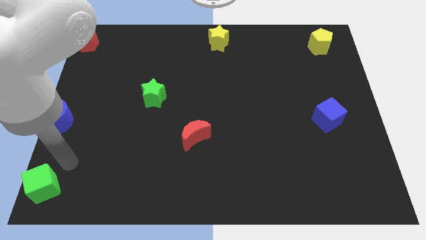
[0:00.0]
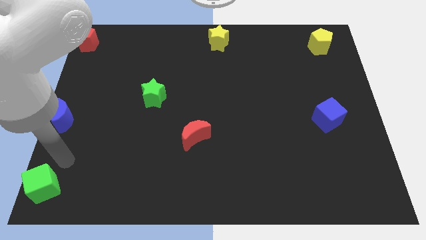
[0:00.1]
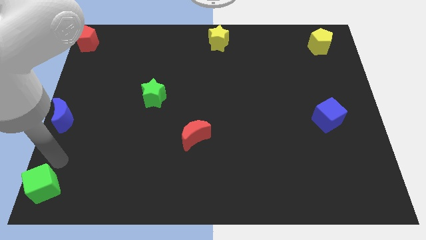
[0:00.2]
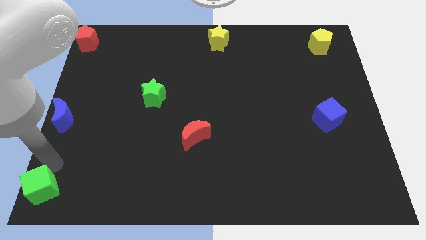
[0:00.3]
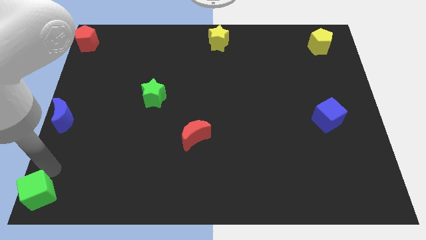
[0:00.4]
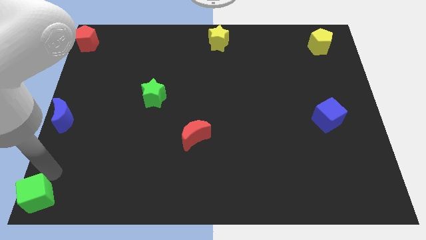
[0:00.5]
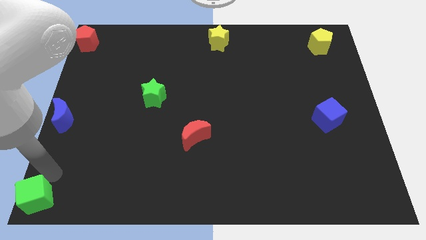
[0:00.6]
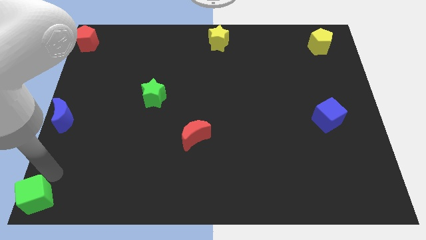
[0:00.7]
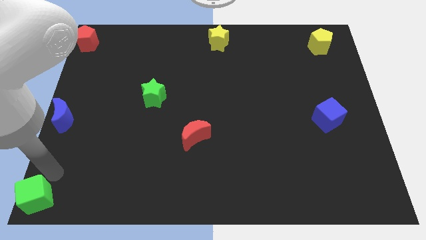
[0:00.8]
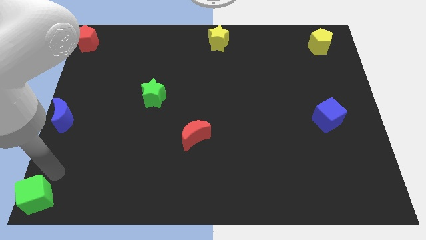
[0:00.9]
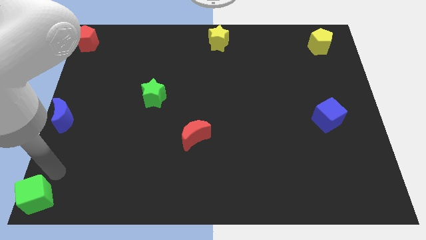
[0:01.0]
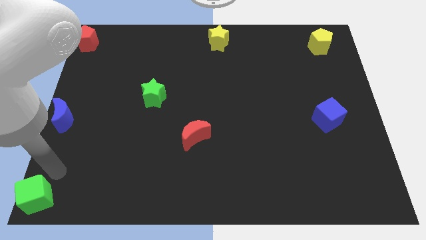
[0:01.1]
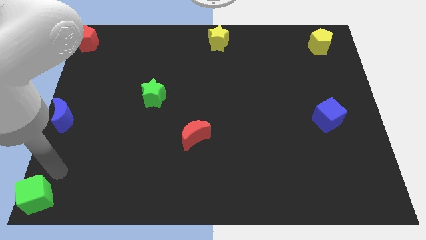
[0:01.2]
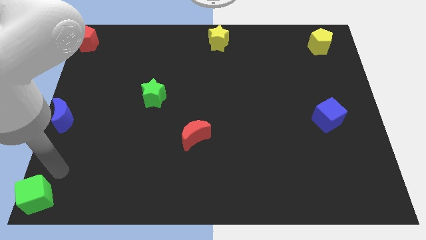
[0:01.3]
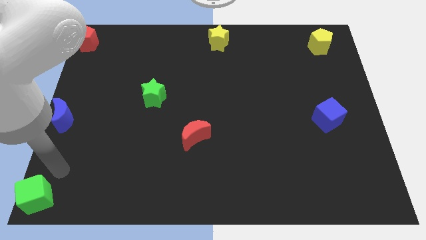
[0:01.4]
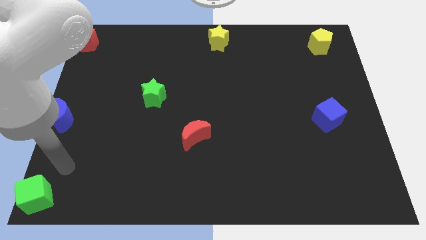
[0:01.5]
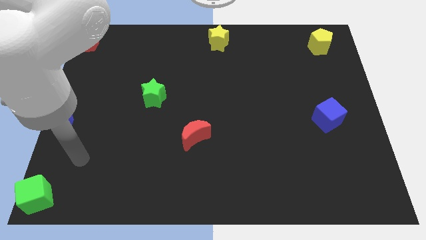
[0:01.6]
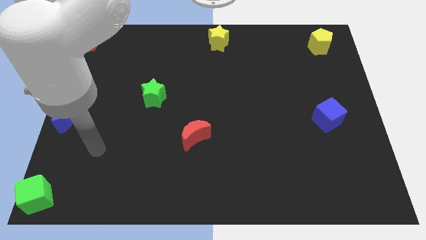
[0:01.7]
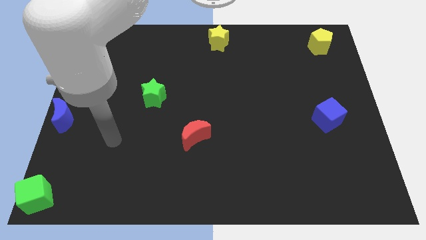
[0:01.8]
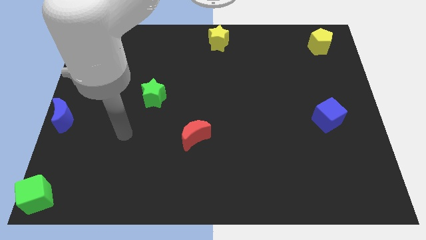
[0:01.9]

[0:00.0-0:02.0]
place a green cube towards the bottom left corner of the board

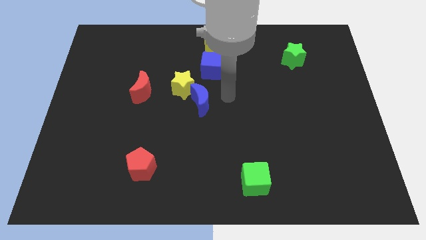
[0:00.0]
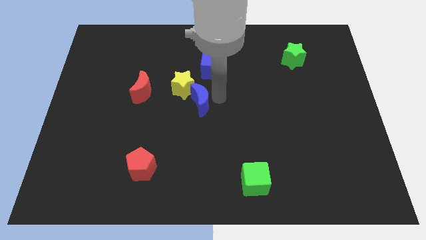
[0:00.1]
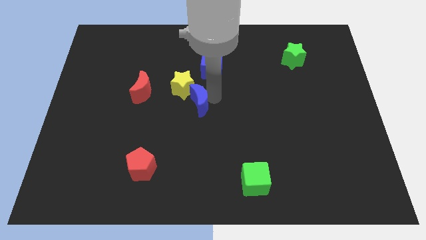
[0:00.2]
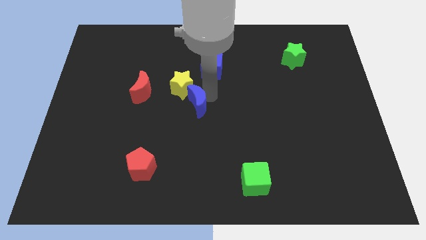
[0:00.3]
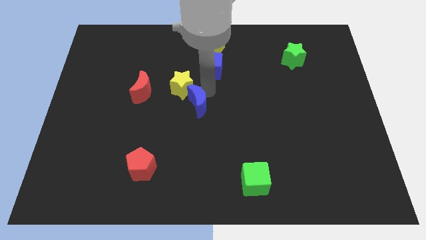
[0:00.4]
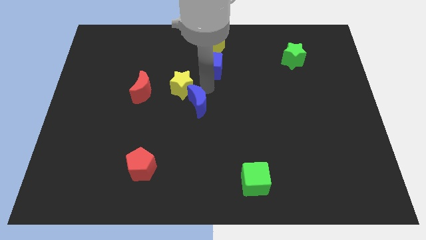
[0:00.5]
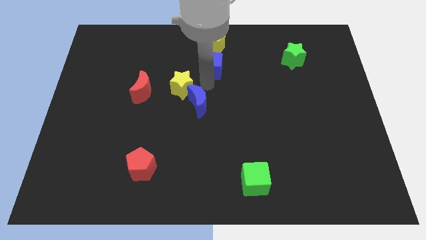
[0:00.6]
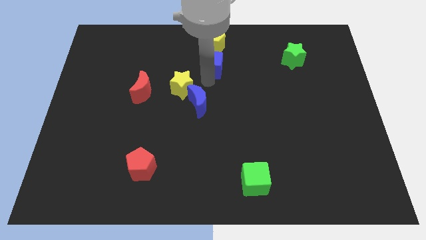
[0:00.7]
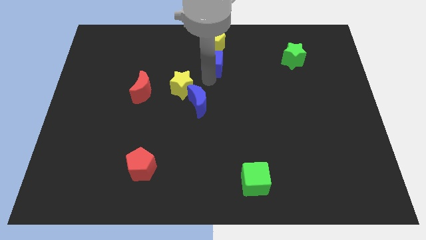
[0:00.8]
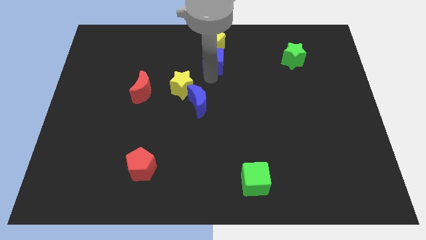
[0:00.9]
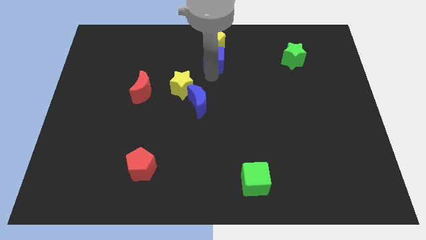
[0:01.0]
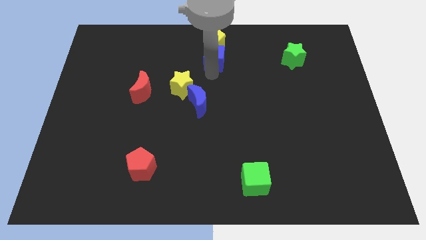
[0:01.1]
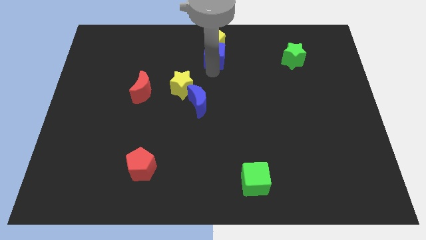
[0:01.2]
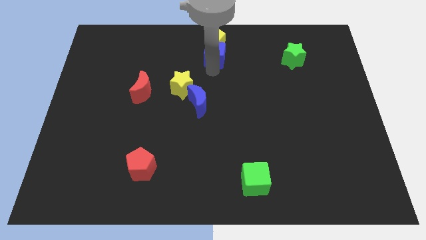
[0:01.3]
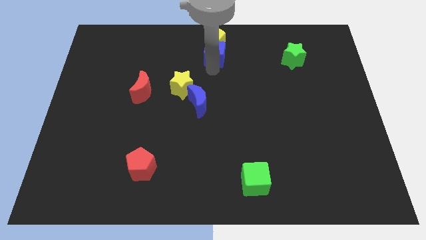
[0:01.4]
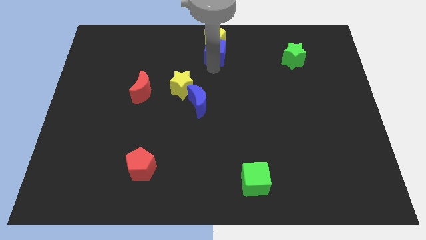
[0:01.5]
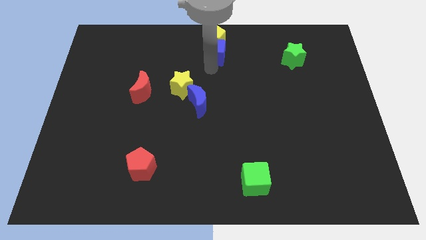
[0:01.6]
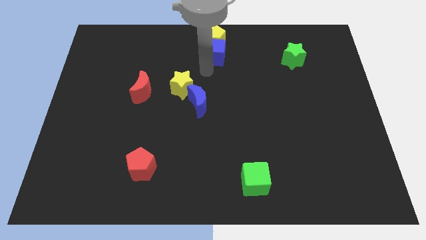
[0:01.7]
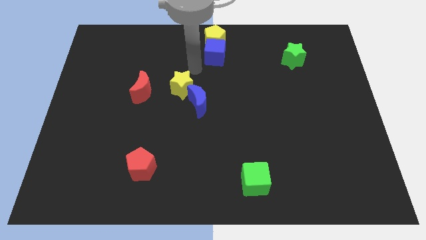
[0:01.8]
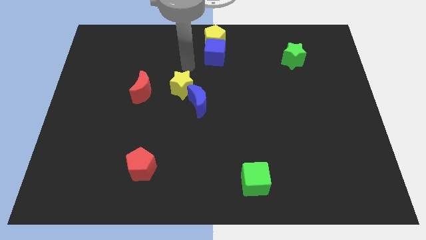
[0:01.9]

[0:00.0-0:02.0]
put the blue cube below the yellow pentagon

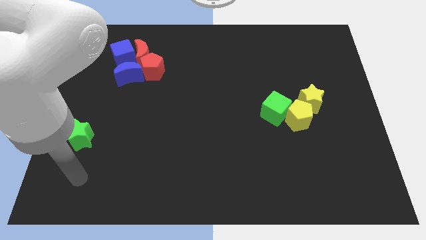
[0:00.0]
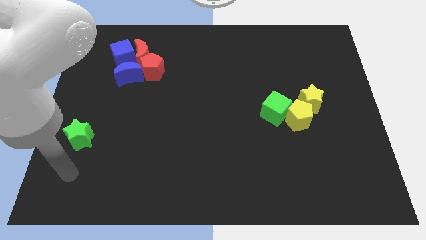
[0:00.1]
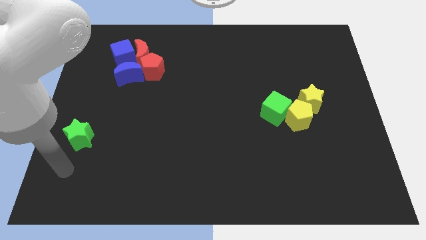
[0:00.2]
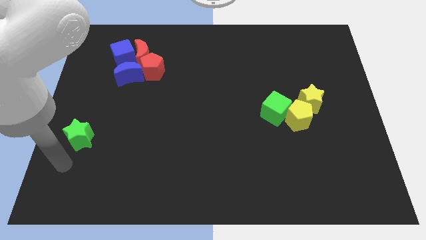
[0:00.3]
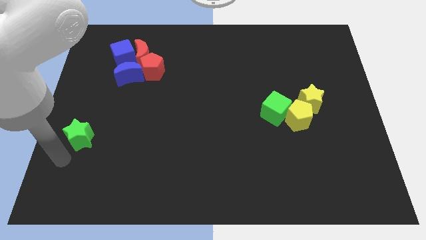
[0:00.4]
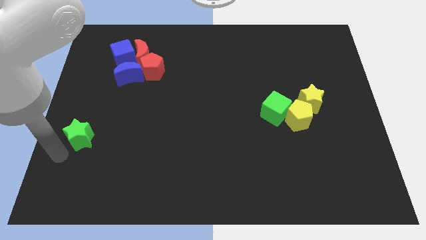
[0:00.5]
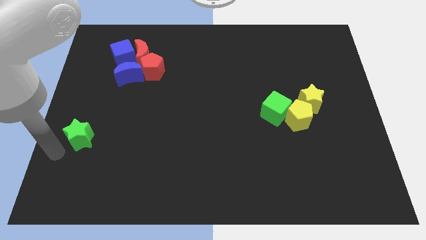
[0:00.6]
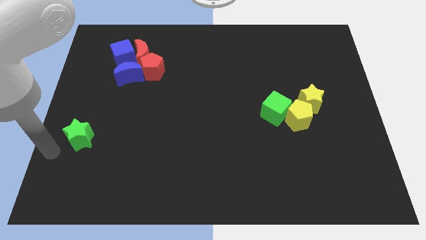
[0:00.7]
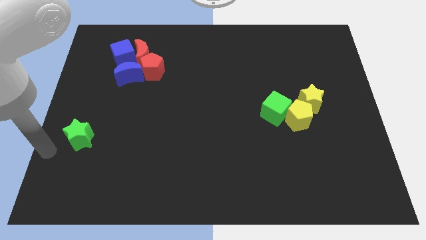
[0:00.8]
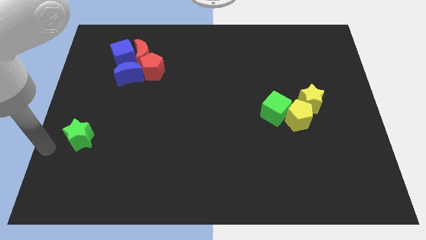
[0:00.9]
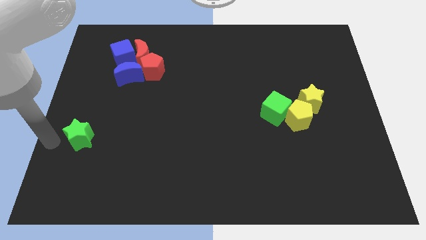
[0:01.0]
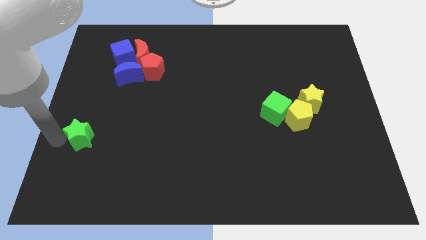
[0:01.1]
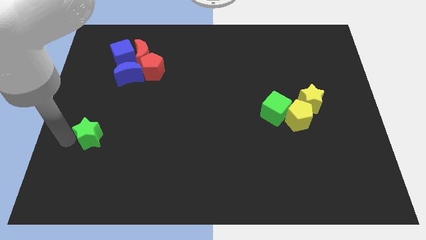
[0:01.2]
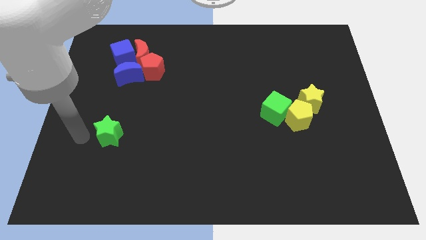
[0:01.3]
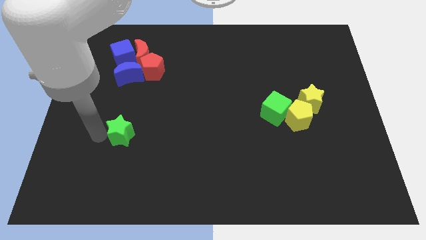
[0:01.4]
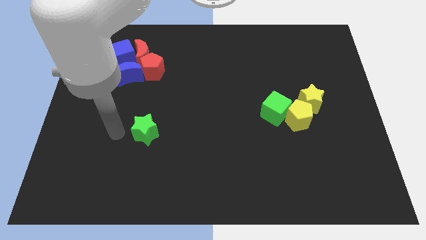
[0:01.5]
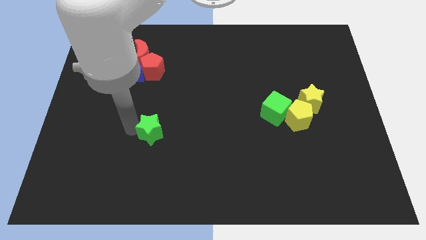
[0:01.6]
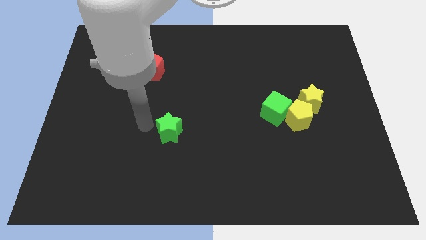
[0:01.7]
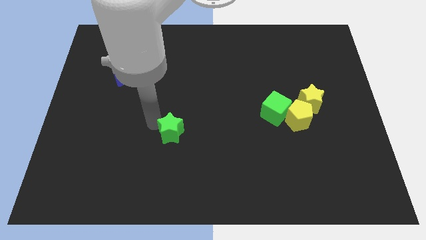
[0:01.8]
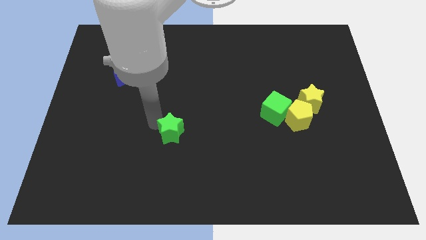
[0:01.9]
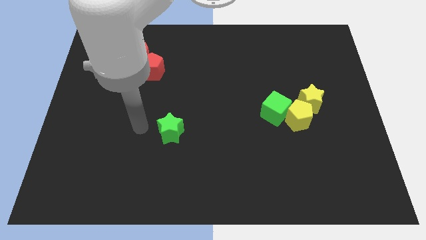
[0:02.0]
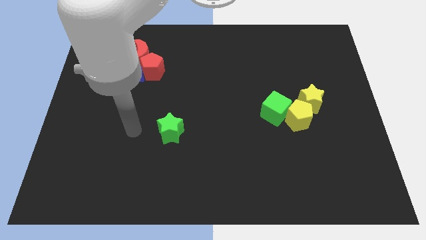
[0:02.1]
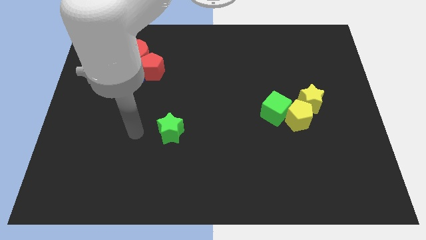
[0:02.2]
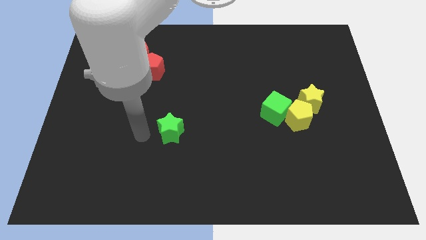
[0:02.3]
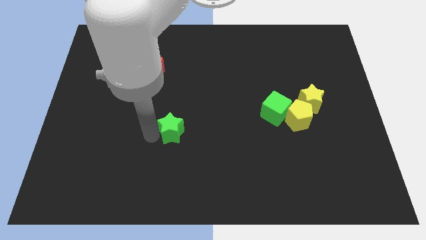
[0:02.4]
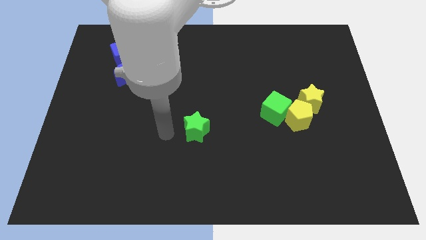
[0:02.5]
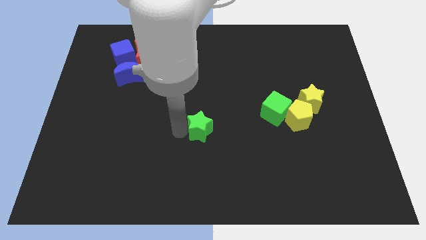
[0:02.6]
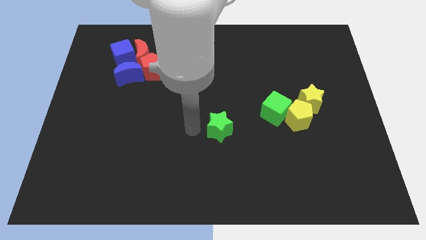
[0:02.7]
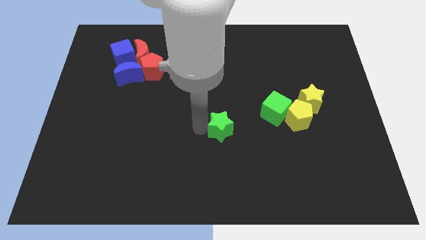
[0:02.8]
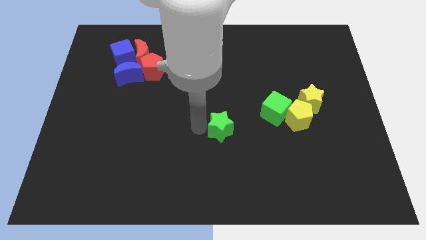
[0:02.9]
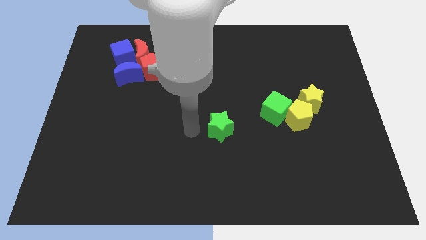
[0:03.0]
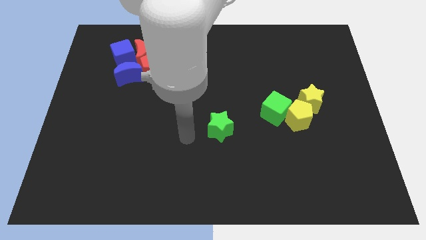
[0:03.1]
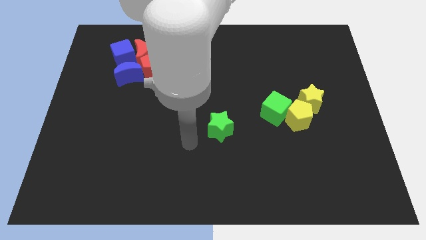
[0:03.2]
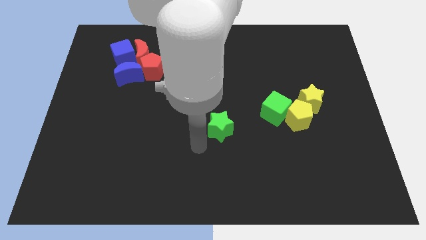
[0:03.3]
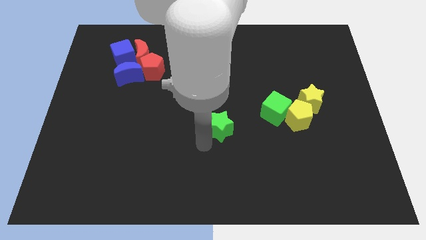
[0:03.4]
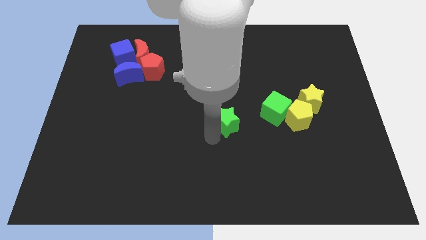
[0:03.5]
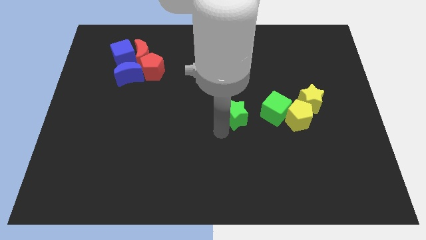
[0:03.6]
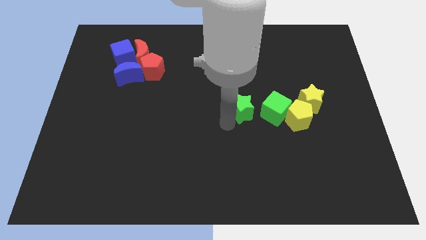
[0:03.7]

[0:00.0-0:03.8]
place the green star in the center

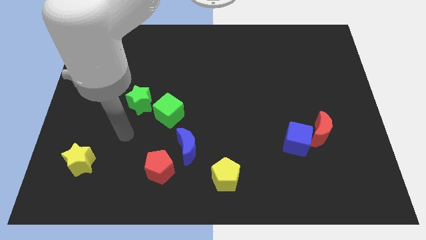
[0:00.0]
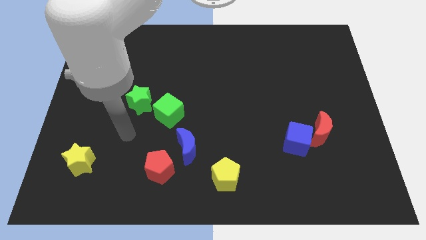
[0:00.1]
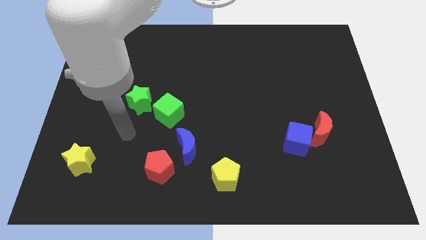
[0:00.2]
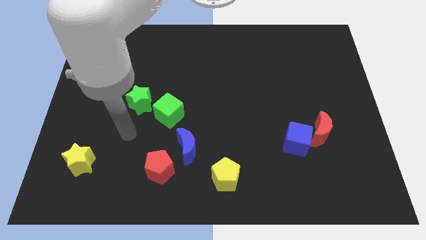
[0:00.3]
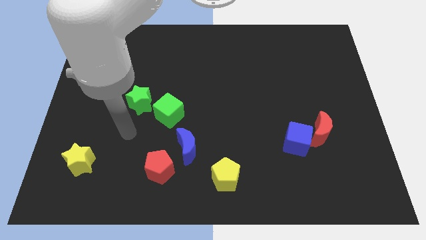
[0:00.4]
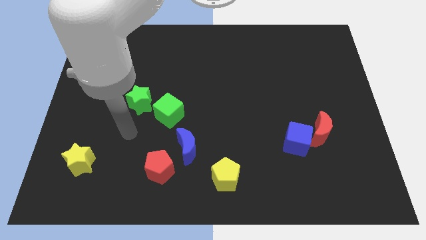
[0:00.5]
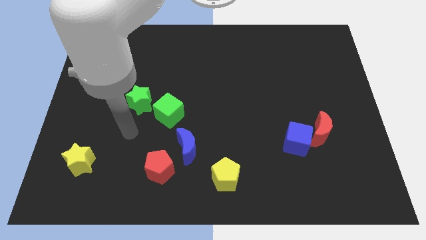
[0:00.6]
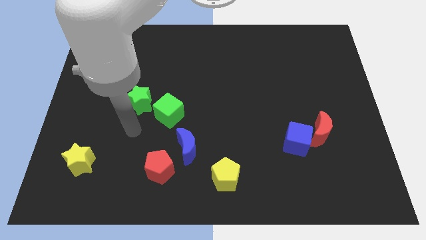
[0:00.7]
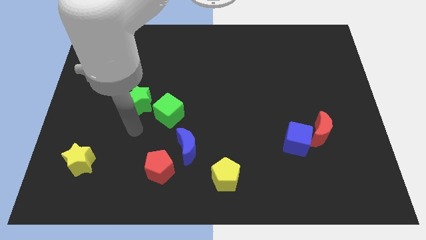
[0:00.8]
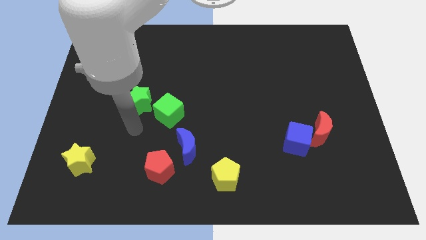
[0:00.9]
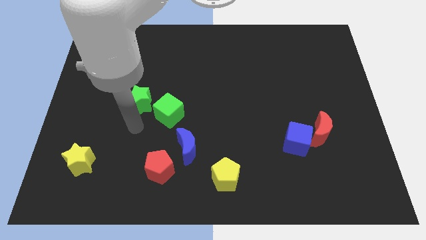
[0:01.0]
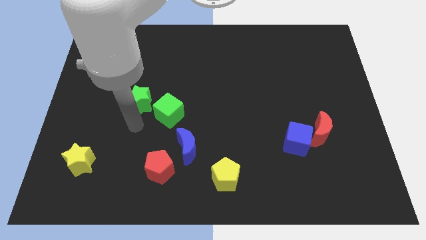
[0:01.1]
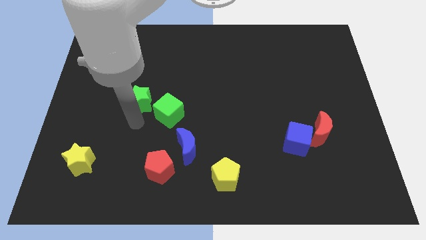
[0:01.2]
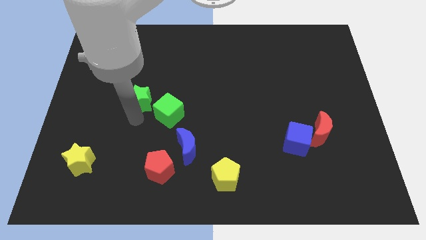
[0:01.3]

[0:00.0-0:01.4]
move the arm down to the green star
